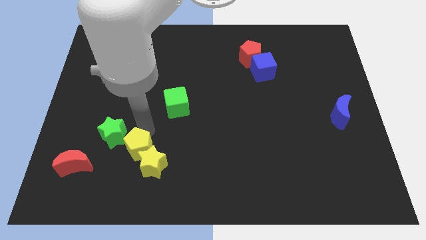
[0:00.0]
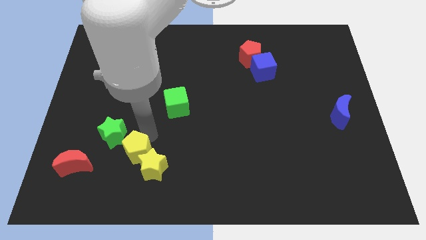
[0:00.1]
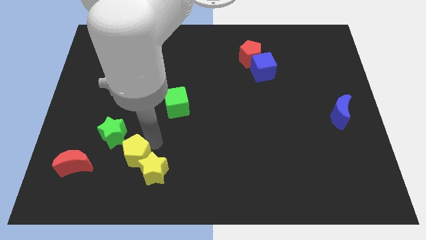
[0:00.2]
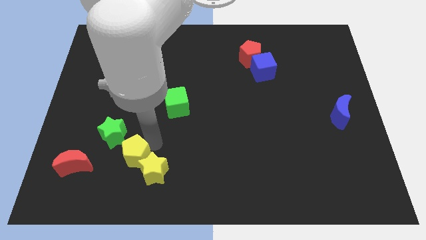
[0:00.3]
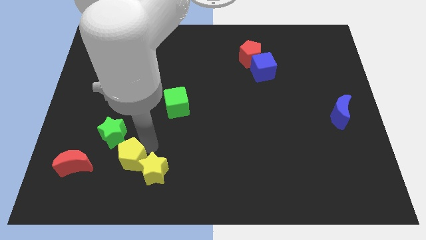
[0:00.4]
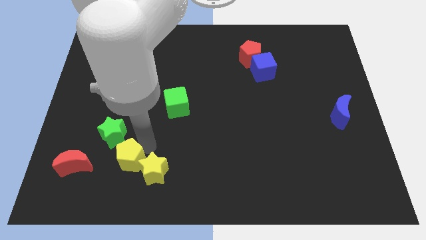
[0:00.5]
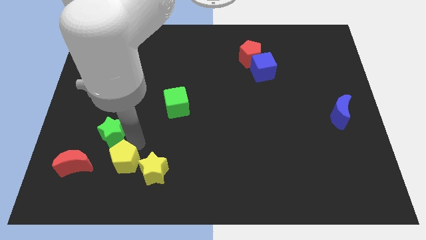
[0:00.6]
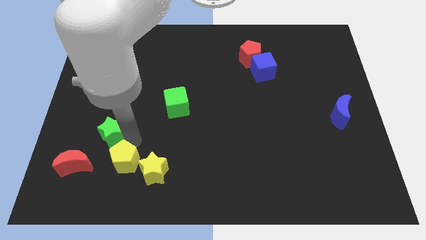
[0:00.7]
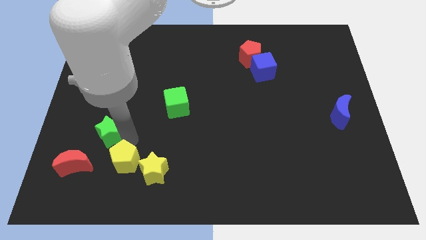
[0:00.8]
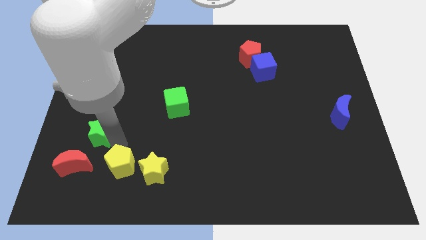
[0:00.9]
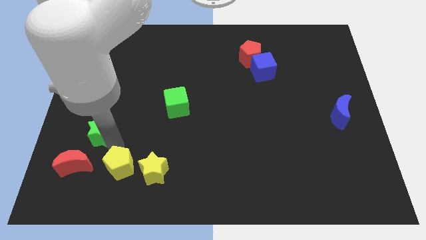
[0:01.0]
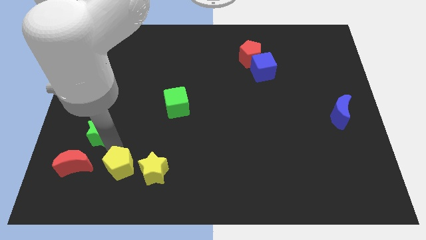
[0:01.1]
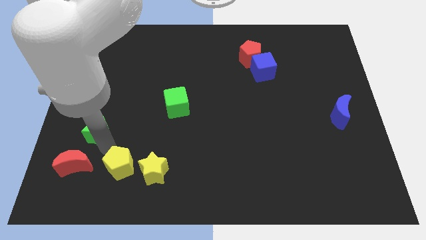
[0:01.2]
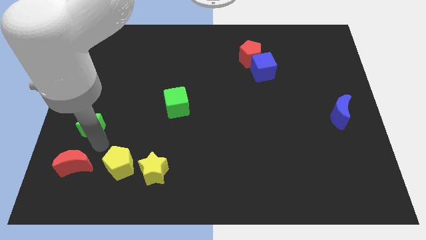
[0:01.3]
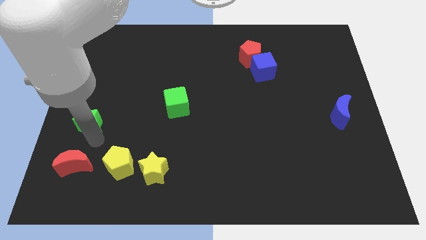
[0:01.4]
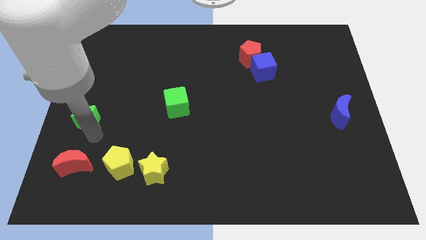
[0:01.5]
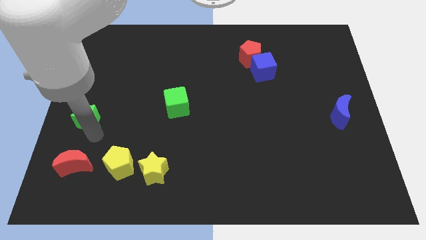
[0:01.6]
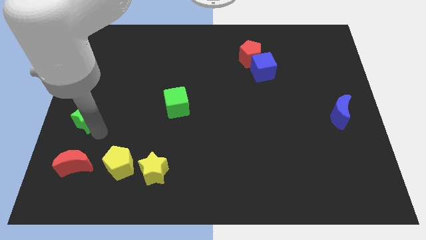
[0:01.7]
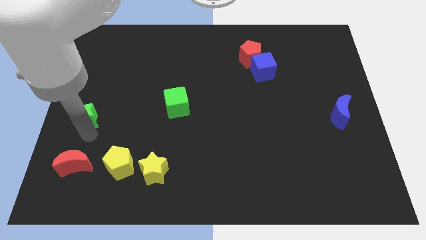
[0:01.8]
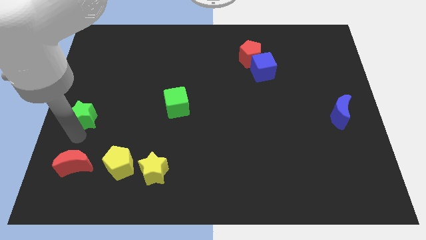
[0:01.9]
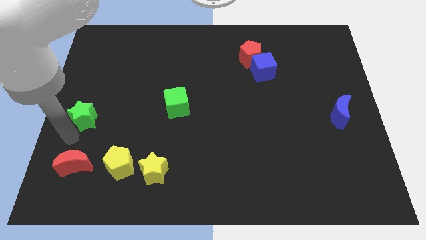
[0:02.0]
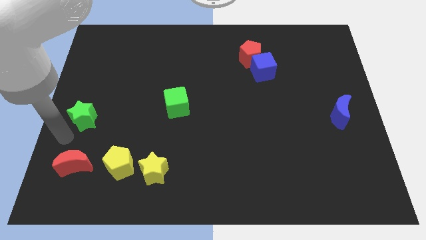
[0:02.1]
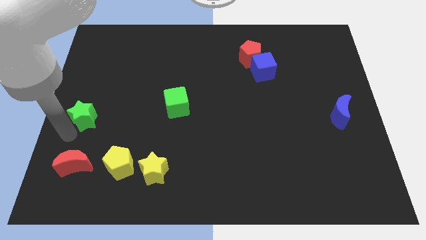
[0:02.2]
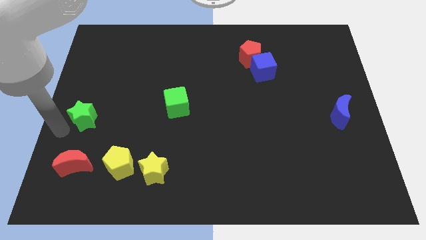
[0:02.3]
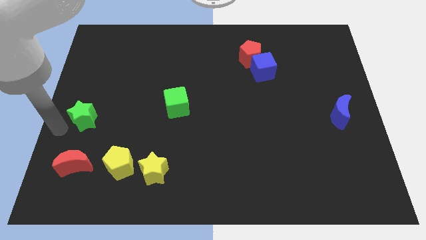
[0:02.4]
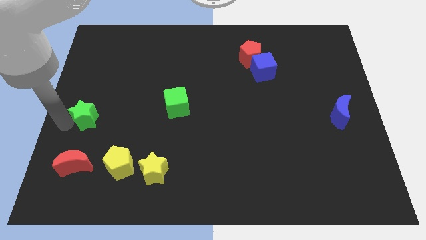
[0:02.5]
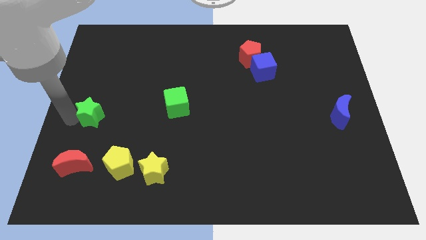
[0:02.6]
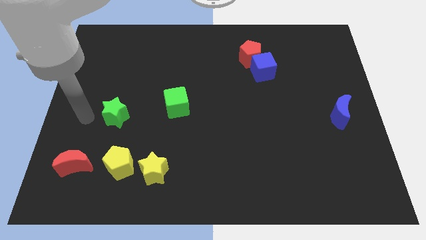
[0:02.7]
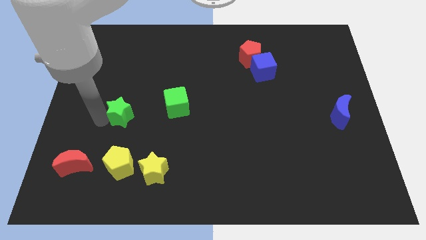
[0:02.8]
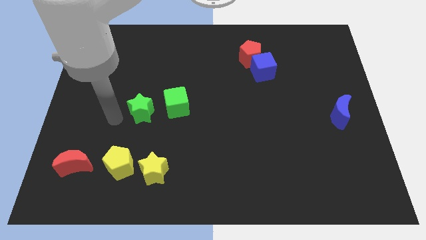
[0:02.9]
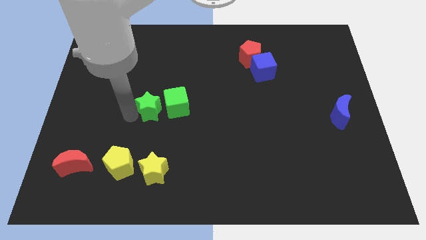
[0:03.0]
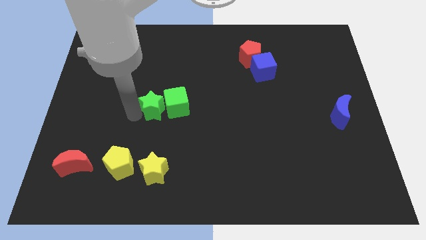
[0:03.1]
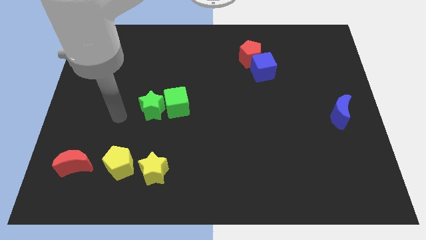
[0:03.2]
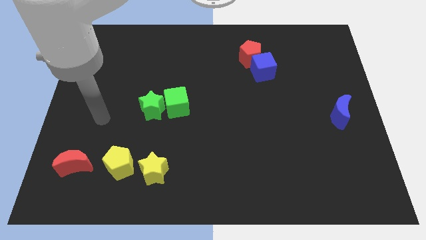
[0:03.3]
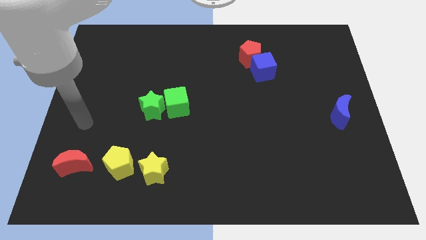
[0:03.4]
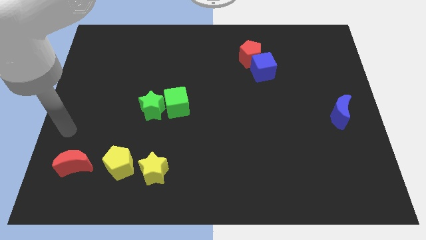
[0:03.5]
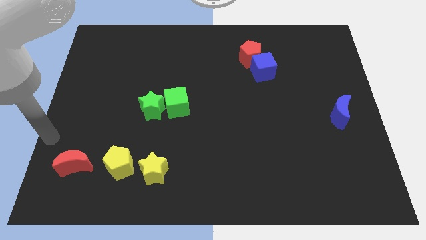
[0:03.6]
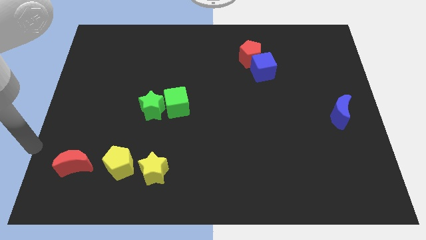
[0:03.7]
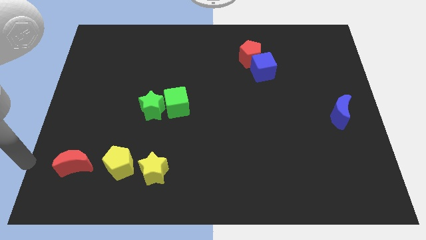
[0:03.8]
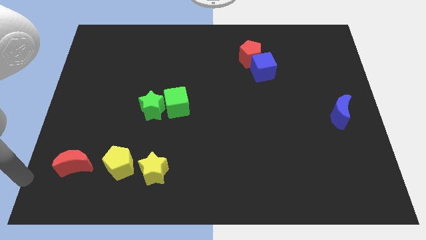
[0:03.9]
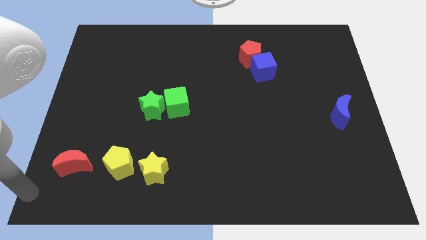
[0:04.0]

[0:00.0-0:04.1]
push green star close to green cube

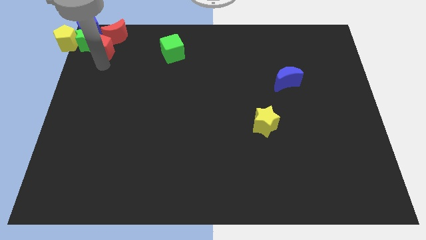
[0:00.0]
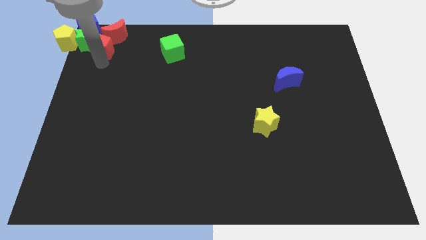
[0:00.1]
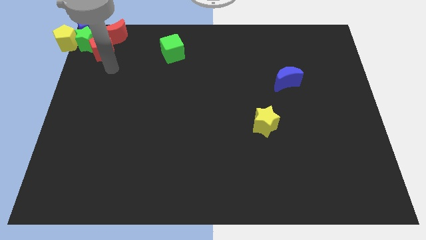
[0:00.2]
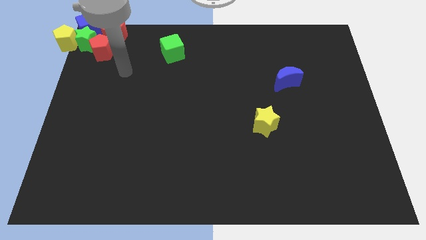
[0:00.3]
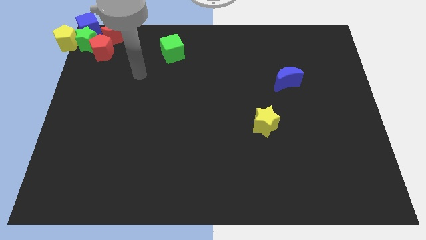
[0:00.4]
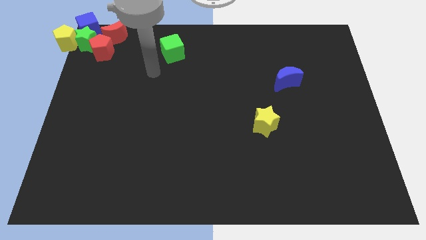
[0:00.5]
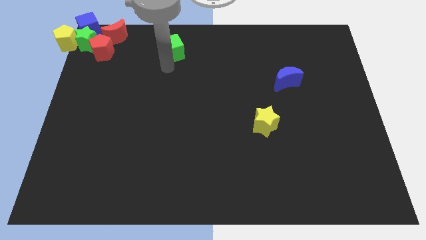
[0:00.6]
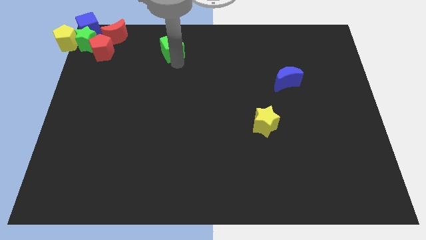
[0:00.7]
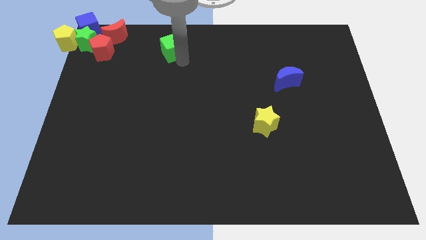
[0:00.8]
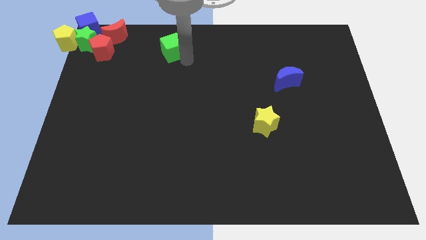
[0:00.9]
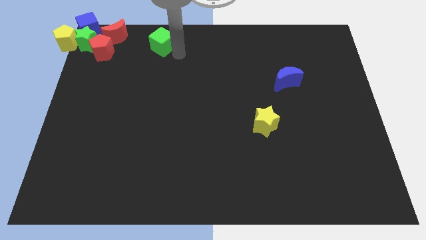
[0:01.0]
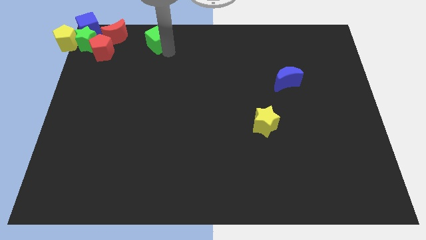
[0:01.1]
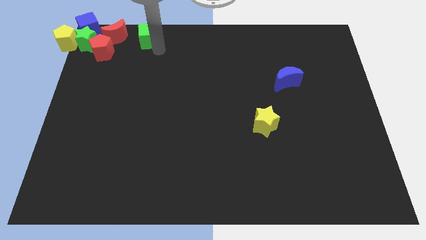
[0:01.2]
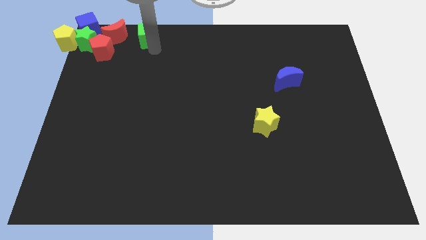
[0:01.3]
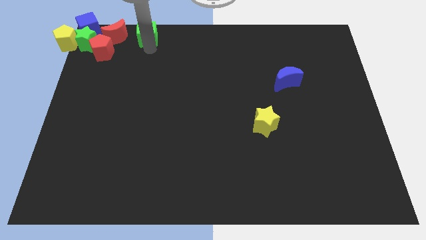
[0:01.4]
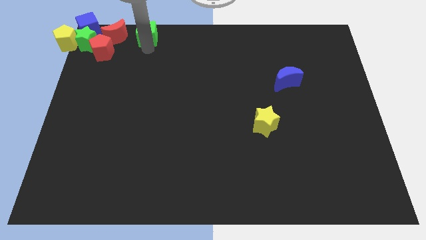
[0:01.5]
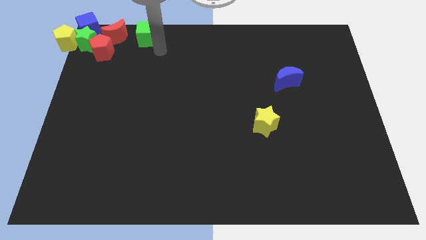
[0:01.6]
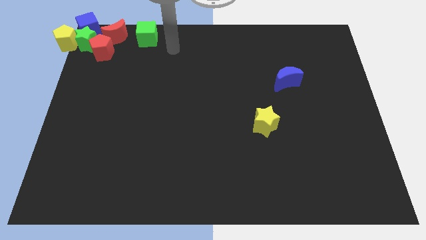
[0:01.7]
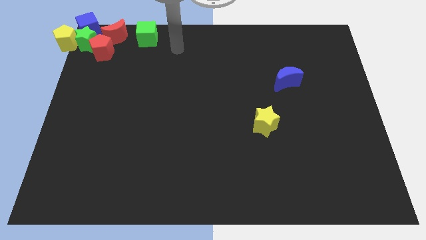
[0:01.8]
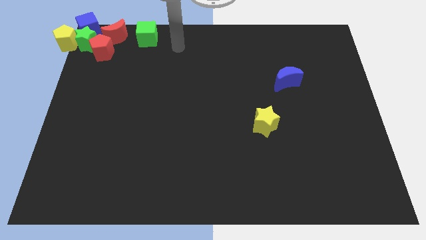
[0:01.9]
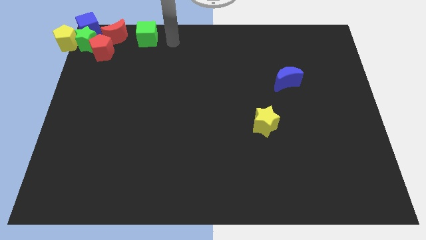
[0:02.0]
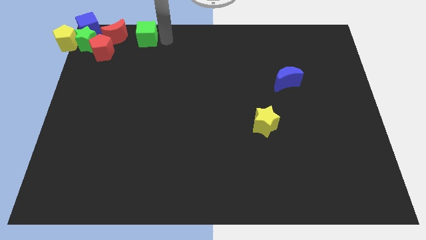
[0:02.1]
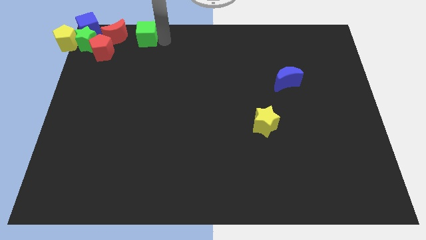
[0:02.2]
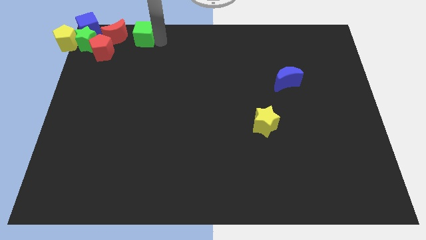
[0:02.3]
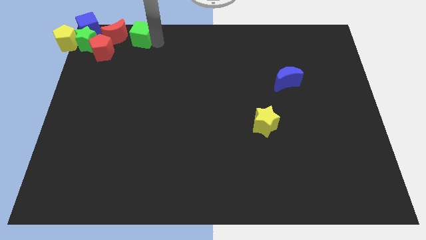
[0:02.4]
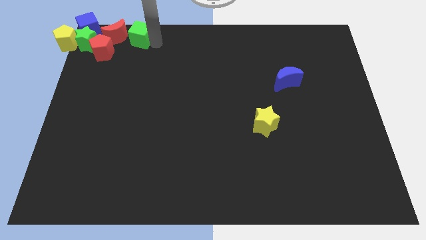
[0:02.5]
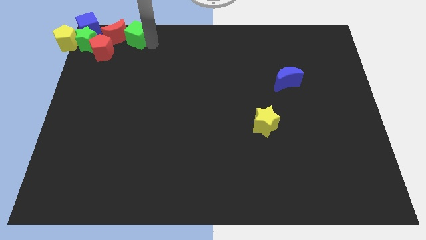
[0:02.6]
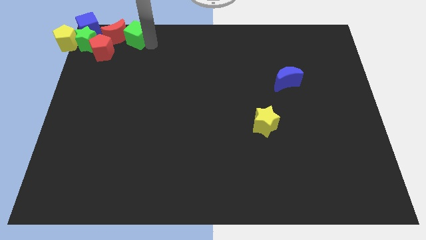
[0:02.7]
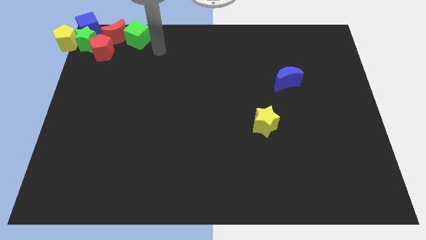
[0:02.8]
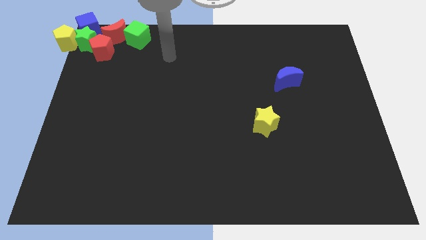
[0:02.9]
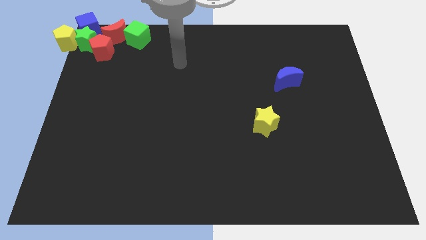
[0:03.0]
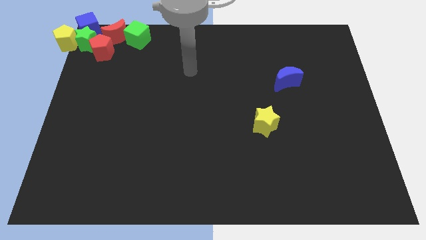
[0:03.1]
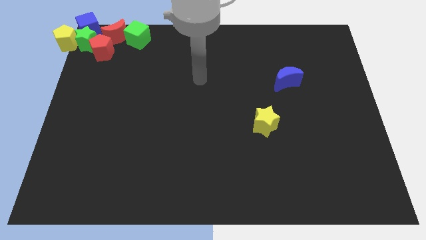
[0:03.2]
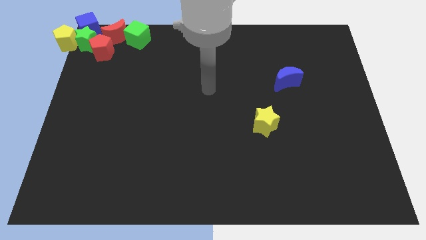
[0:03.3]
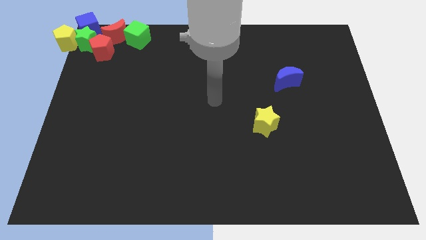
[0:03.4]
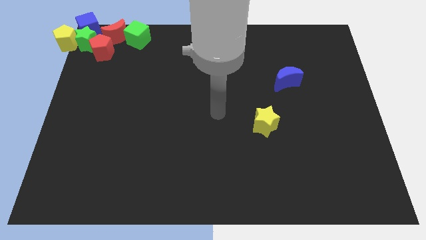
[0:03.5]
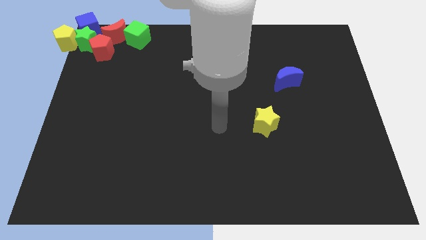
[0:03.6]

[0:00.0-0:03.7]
place the green cube right to the red moon

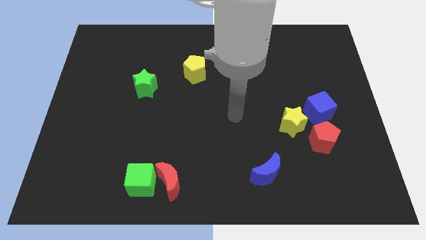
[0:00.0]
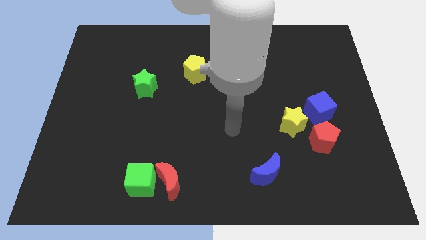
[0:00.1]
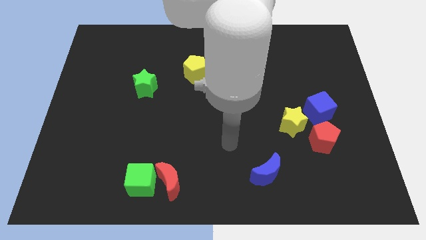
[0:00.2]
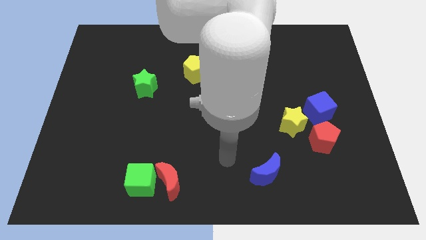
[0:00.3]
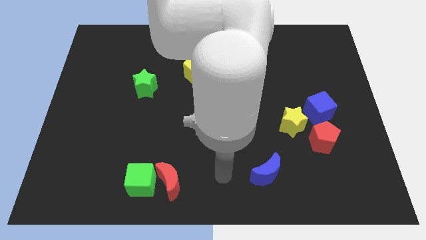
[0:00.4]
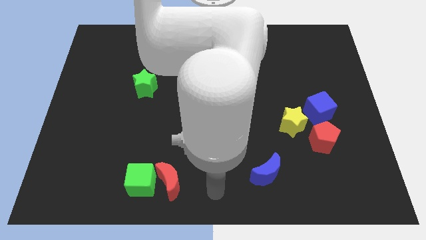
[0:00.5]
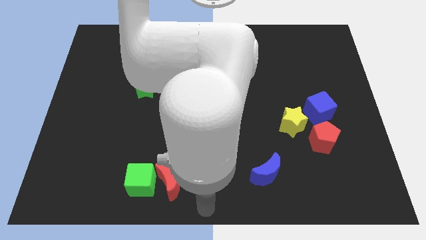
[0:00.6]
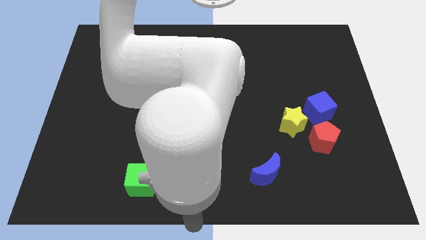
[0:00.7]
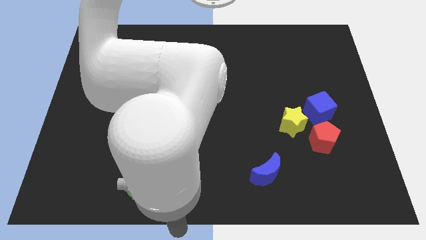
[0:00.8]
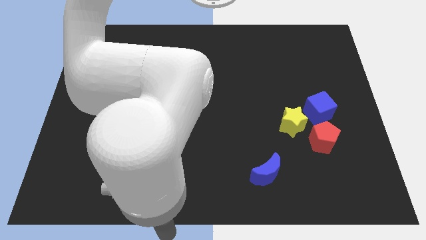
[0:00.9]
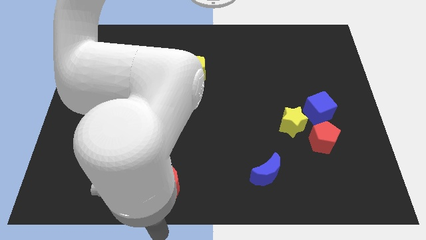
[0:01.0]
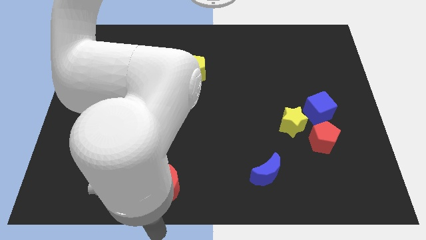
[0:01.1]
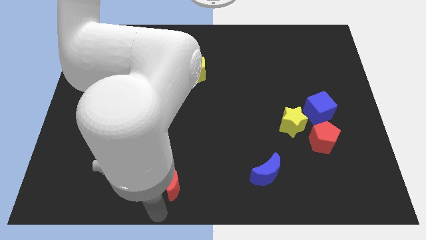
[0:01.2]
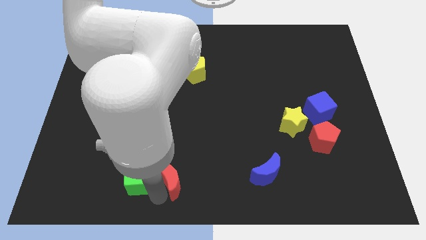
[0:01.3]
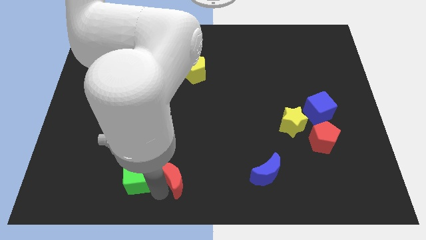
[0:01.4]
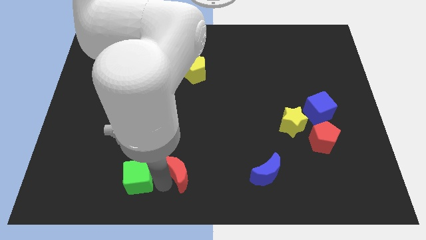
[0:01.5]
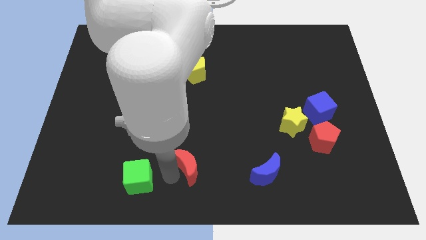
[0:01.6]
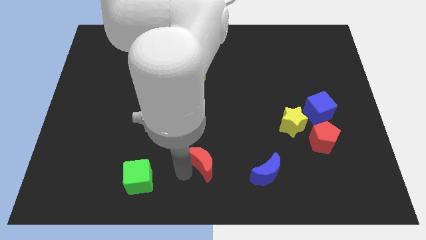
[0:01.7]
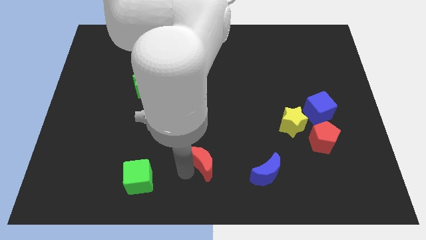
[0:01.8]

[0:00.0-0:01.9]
separate the red crescent from the green cube
